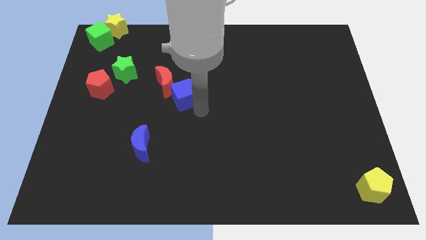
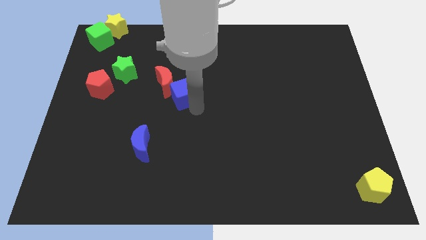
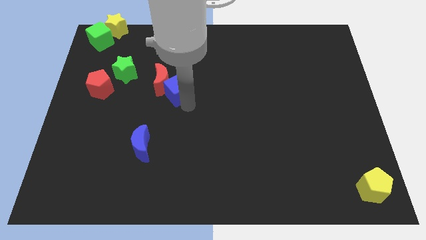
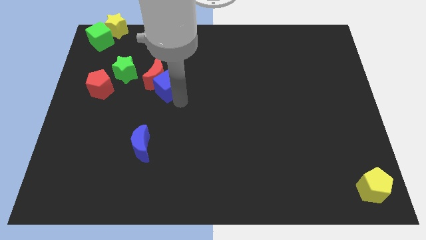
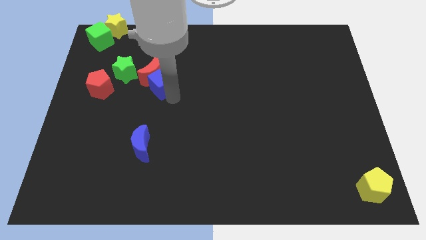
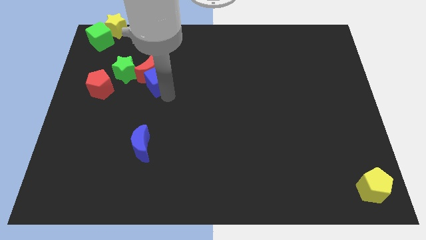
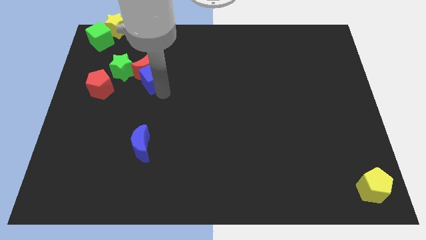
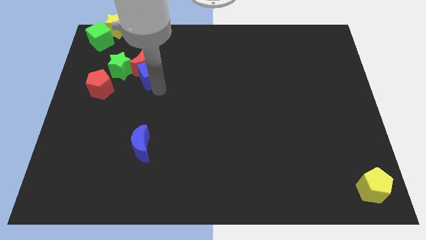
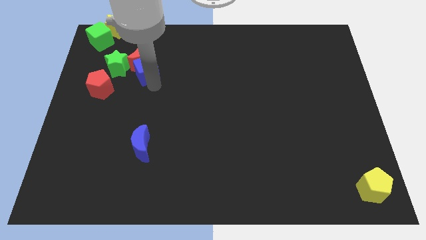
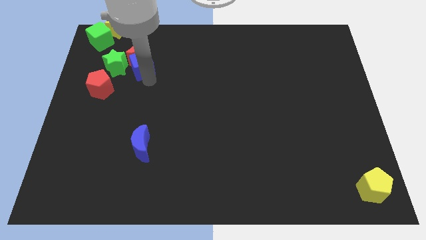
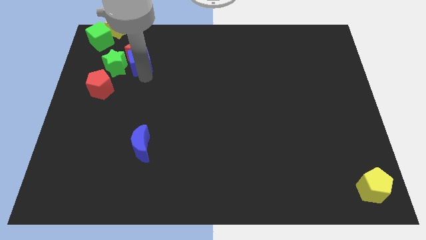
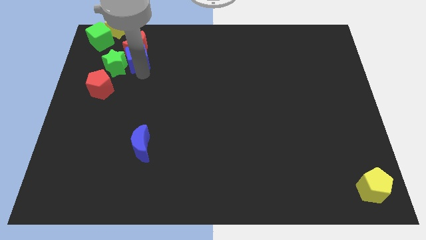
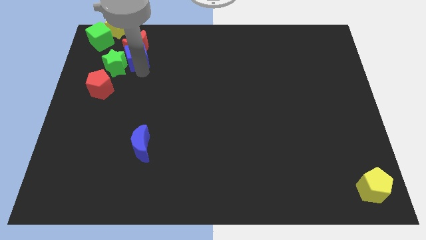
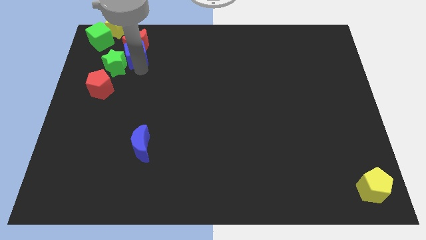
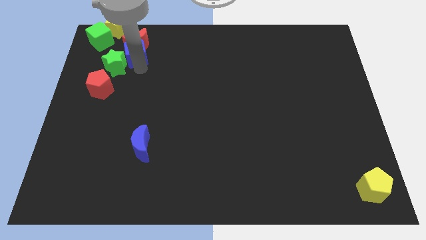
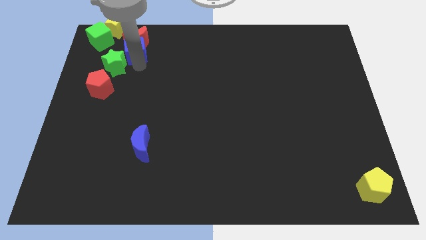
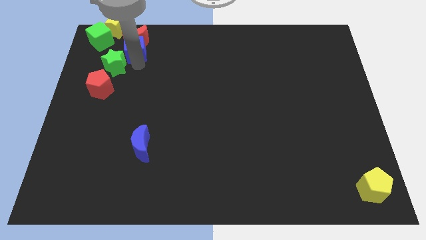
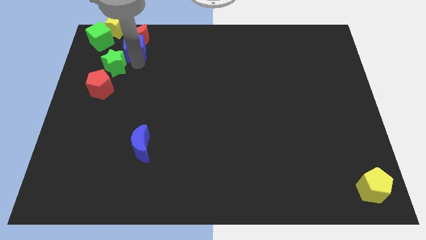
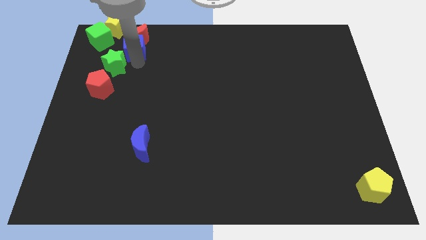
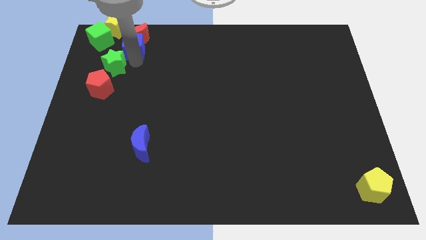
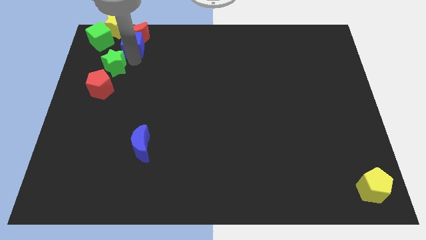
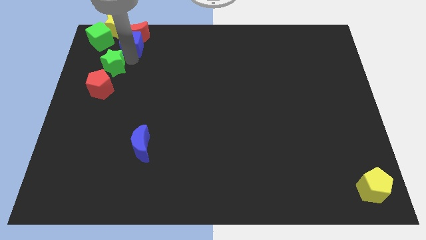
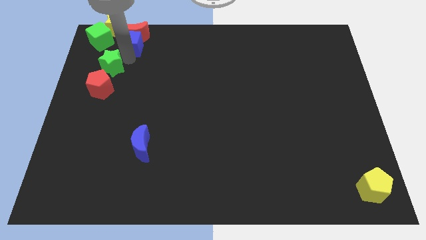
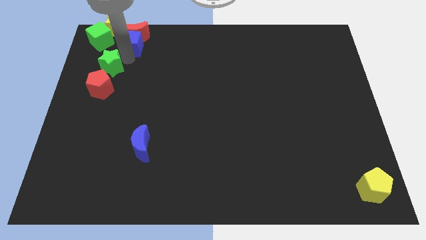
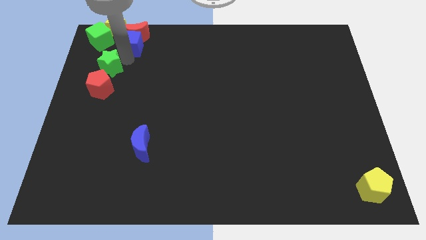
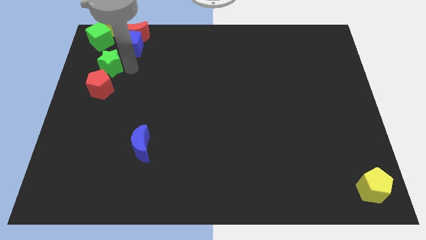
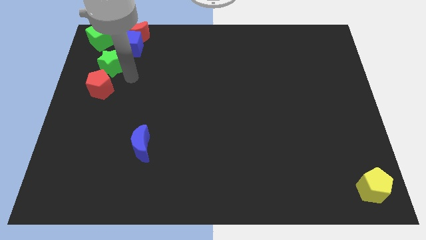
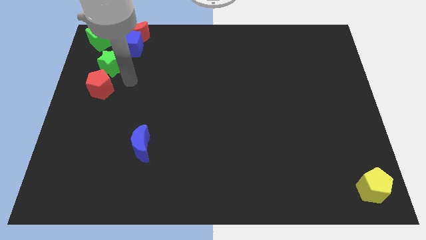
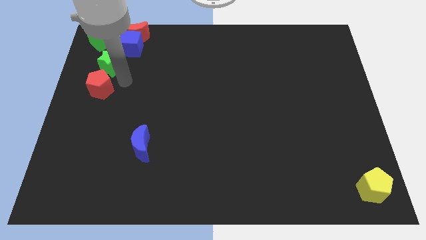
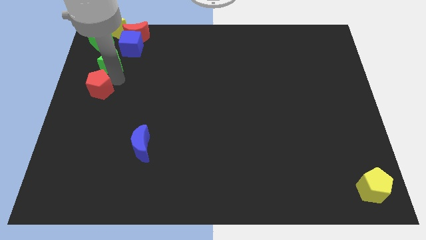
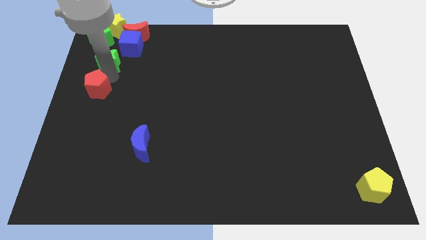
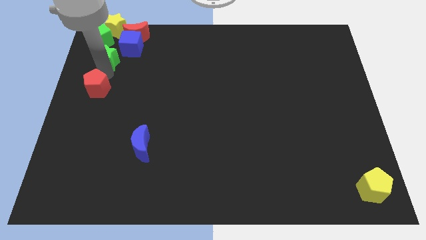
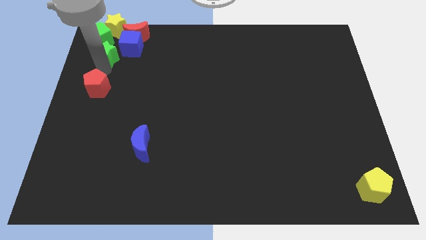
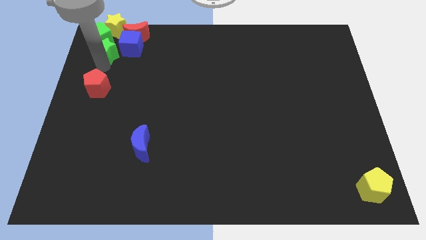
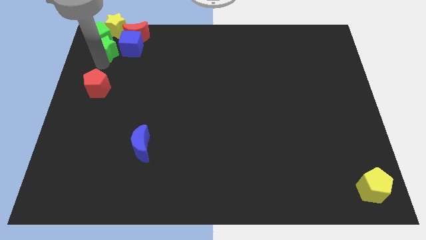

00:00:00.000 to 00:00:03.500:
push the blue cube red moon and green star towards the top left corner of the board

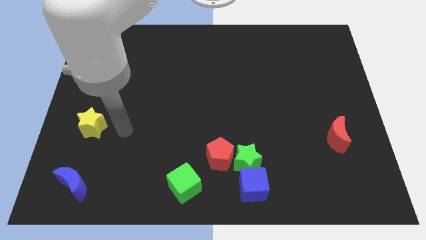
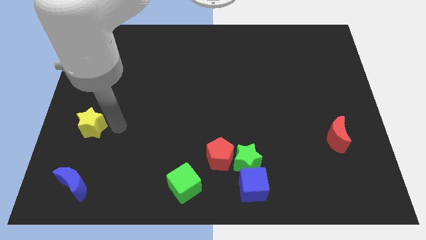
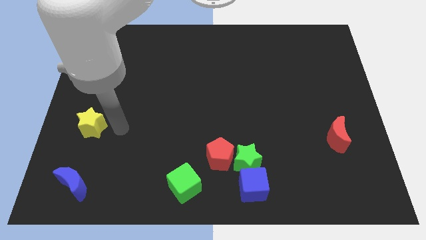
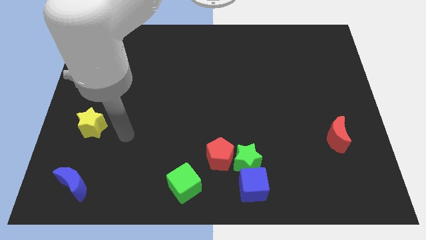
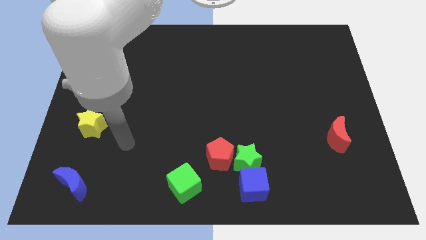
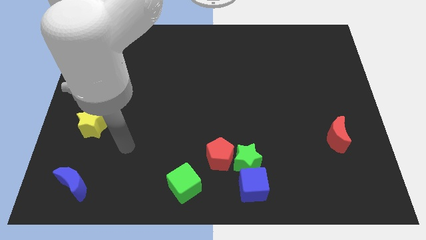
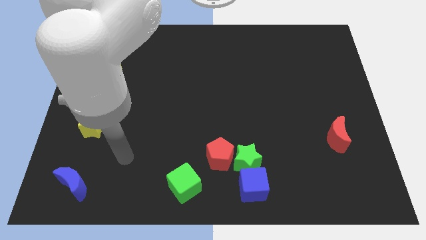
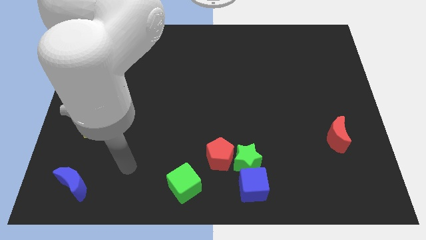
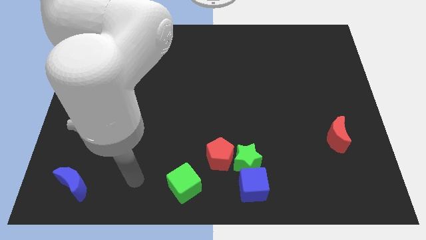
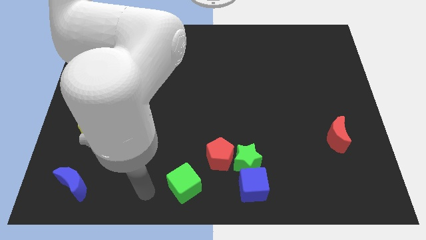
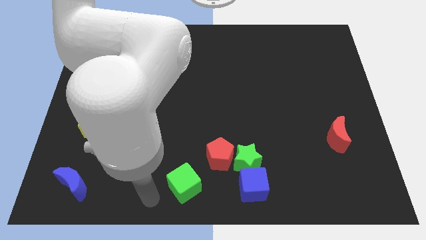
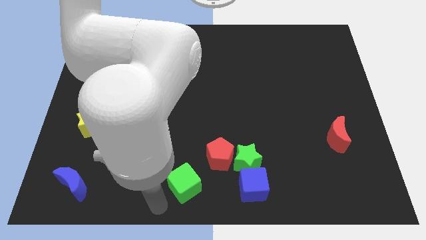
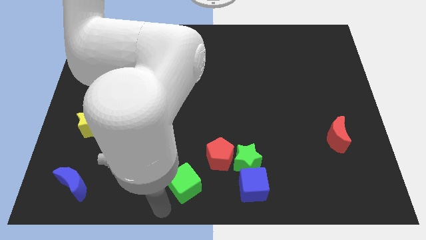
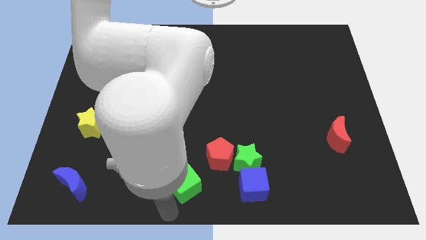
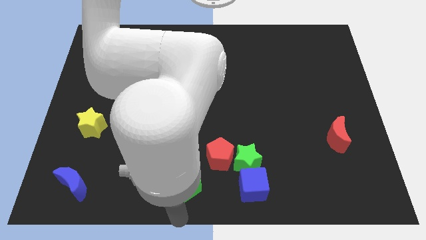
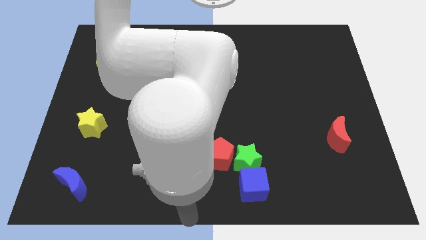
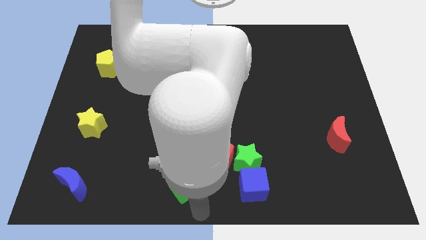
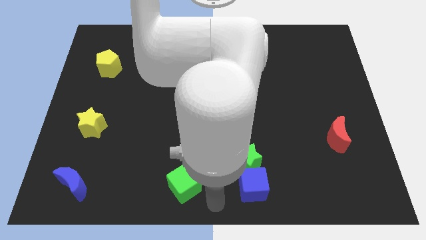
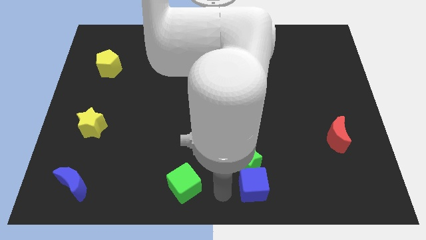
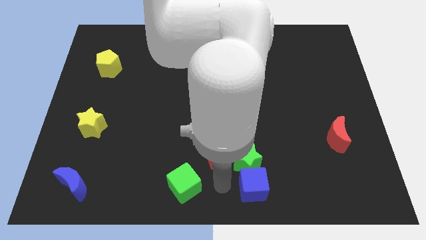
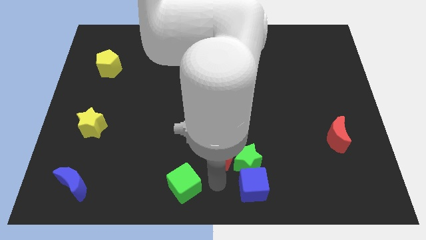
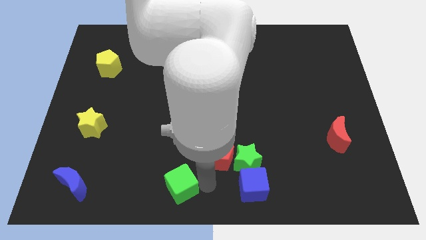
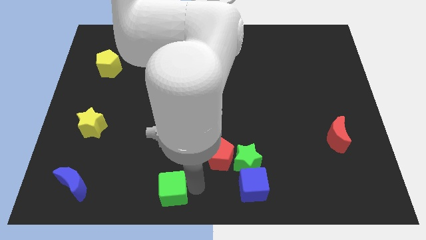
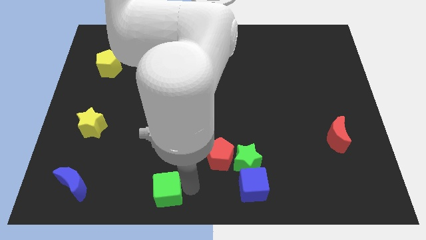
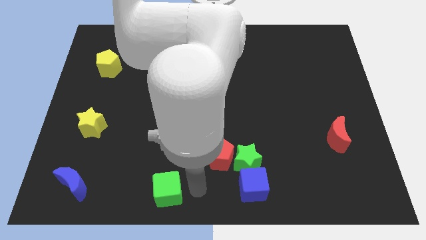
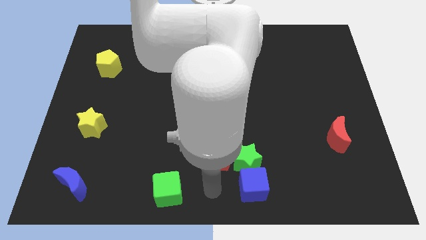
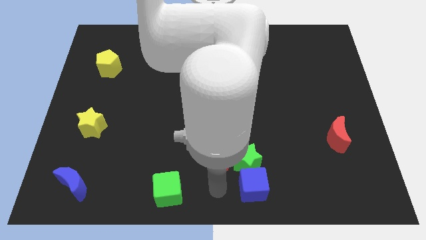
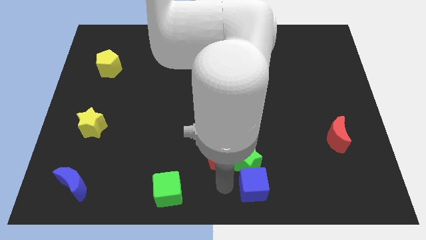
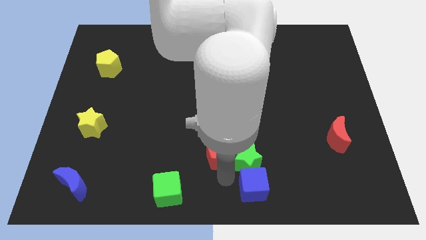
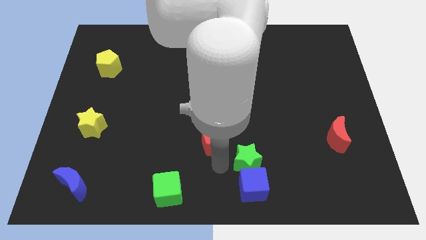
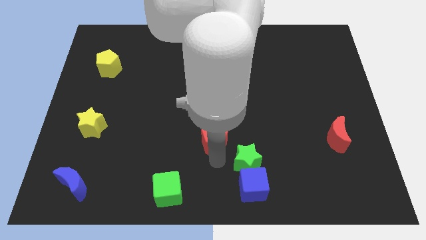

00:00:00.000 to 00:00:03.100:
separate green cube and red pentagon

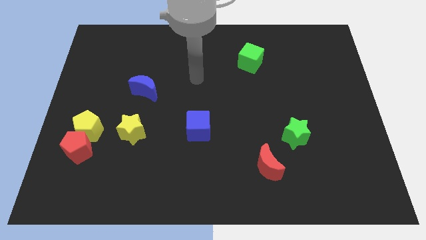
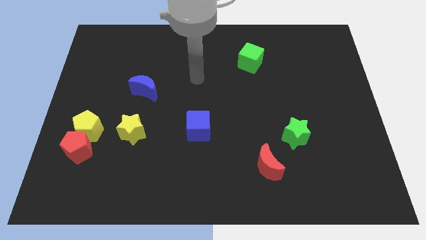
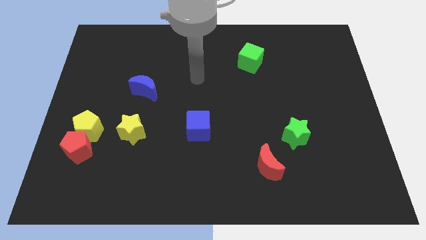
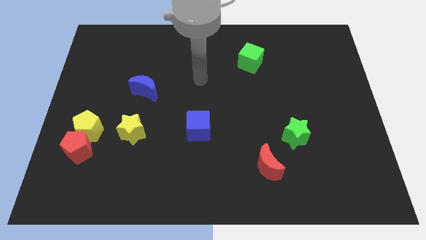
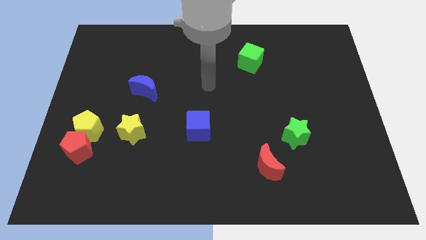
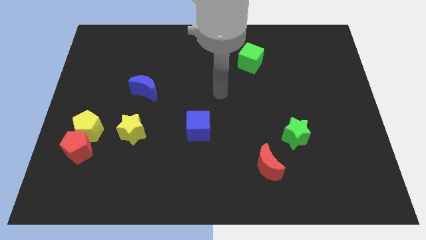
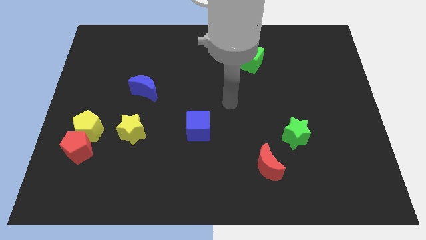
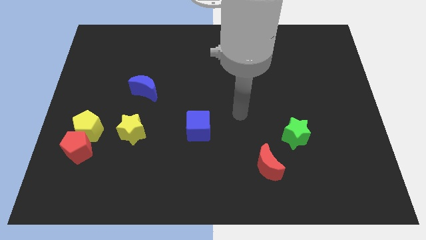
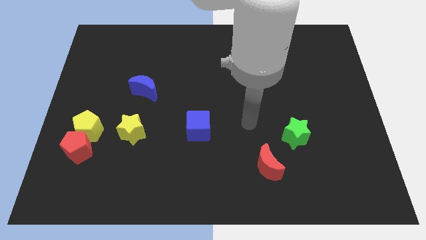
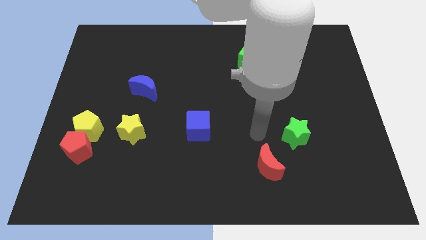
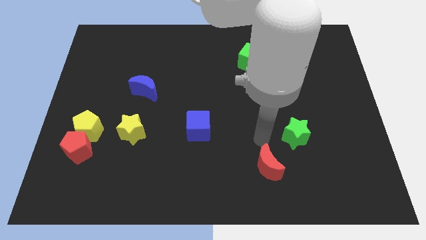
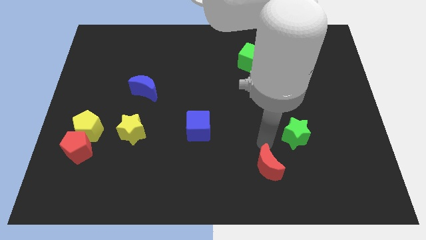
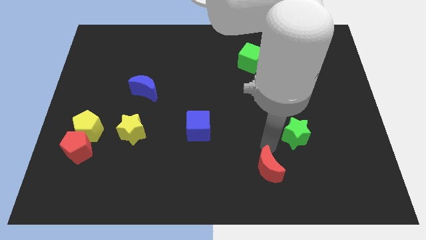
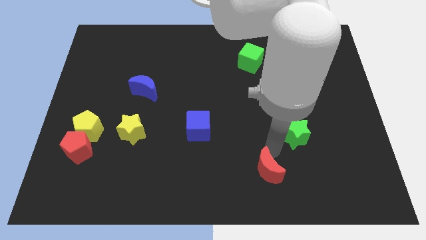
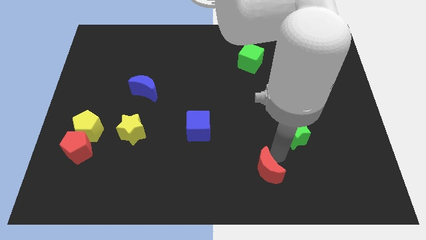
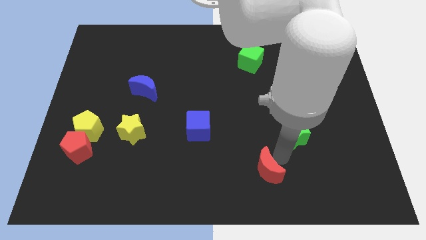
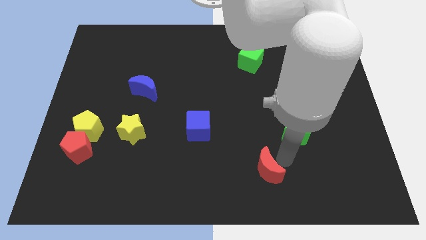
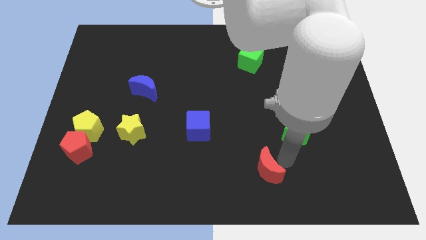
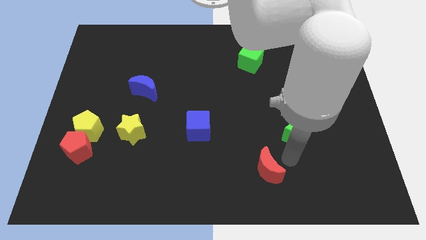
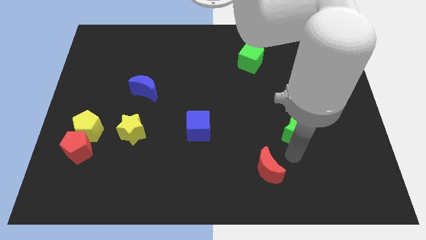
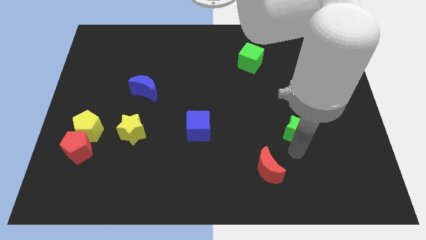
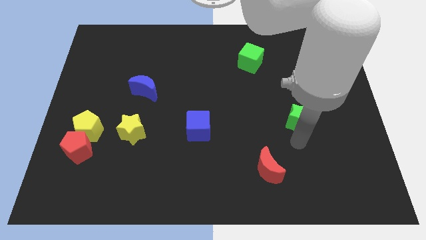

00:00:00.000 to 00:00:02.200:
take the arm to the bottom of the green star slightly touching

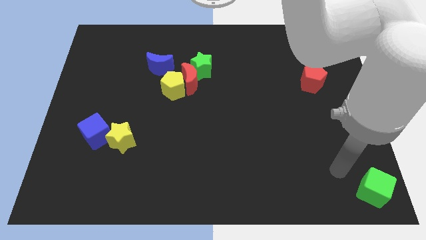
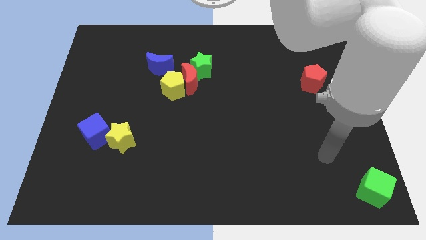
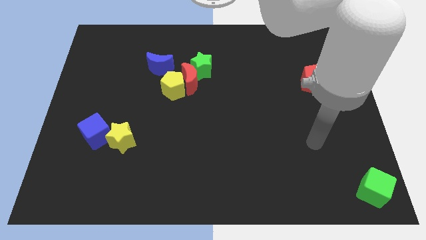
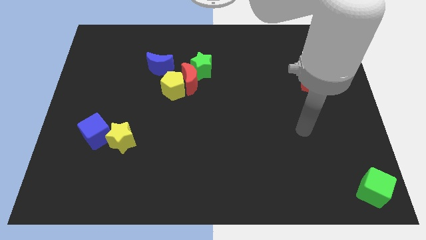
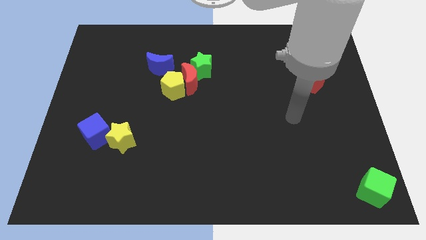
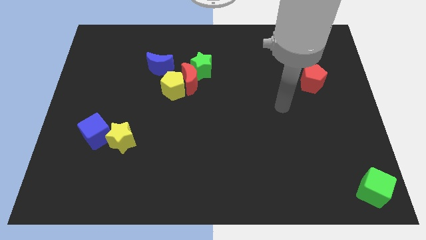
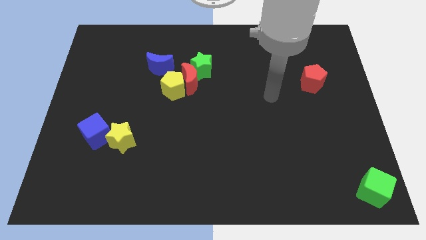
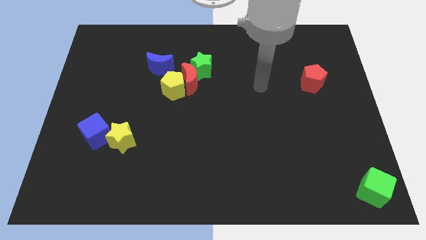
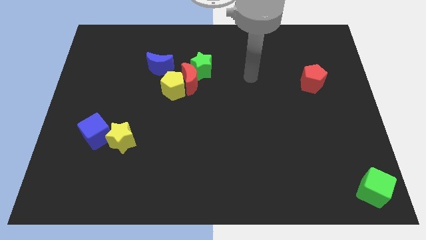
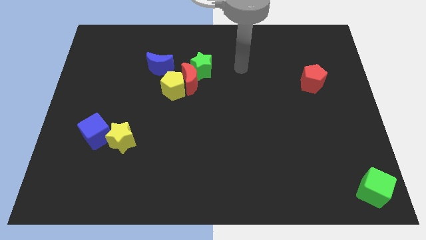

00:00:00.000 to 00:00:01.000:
point the arm to the right of the green star
